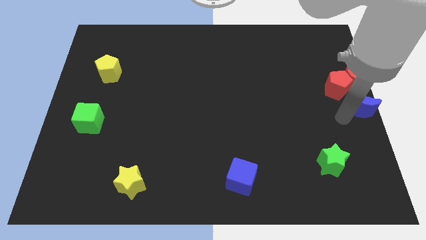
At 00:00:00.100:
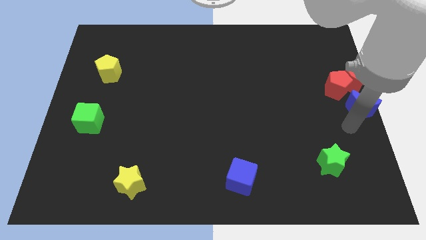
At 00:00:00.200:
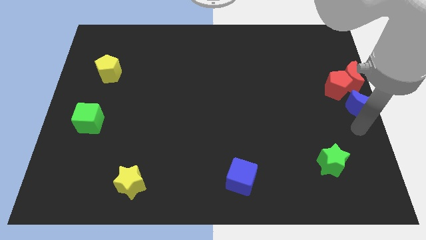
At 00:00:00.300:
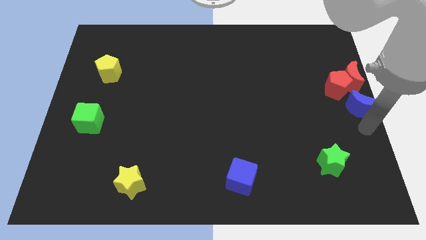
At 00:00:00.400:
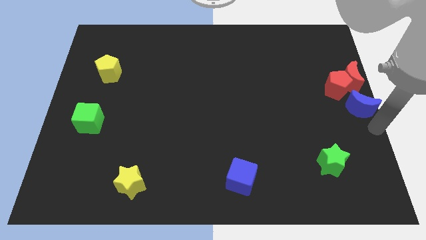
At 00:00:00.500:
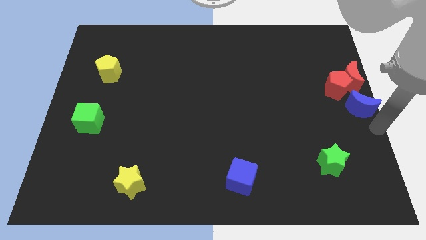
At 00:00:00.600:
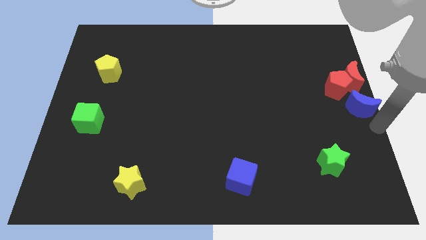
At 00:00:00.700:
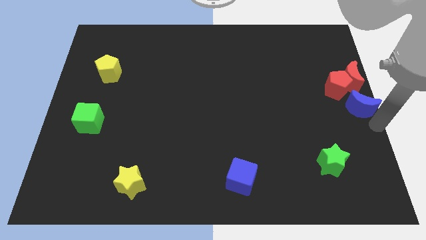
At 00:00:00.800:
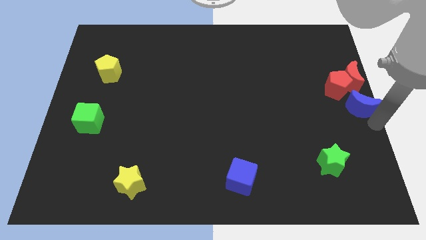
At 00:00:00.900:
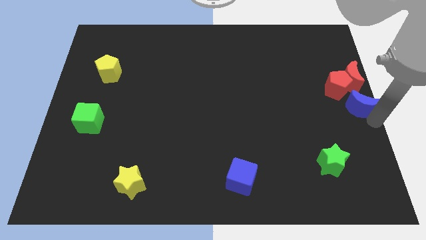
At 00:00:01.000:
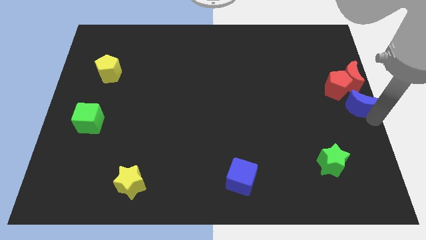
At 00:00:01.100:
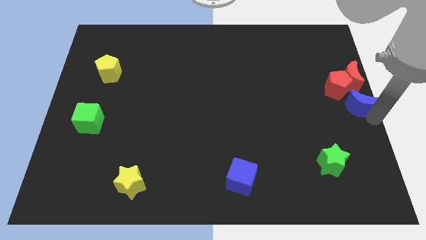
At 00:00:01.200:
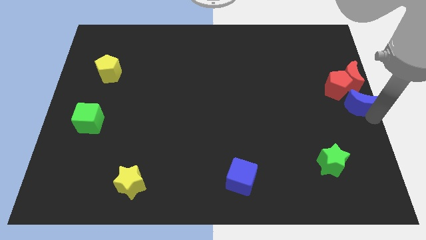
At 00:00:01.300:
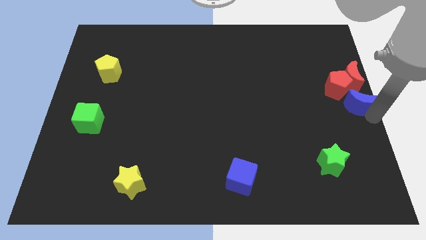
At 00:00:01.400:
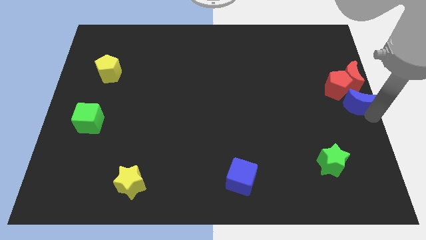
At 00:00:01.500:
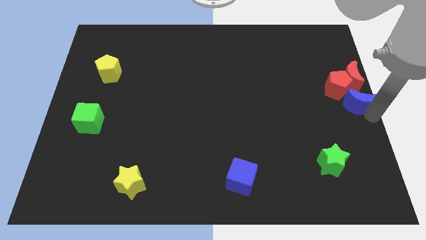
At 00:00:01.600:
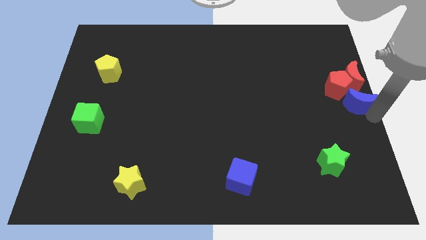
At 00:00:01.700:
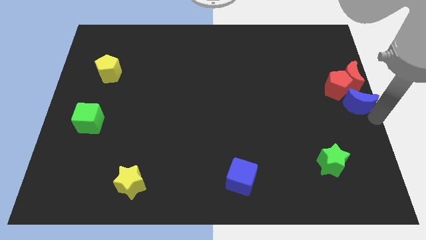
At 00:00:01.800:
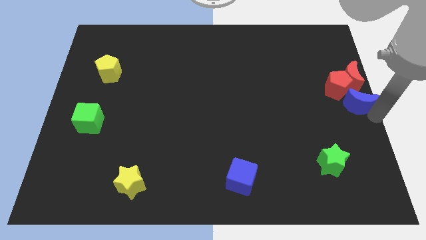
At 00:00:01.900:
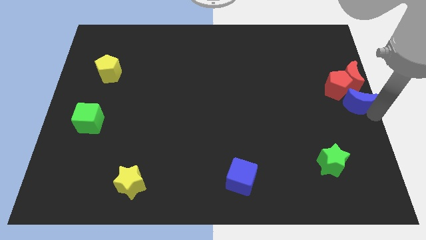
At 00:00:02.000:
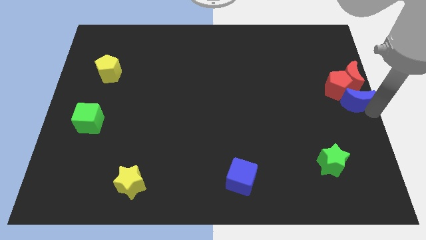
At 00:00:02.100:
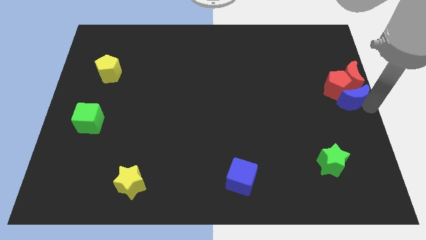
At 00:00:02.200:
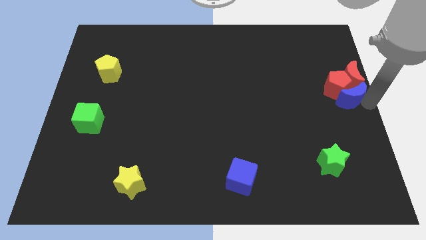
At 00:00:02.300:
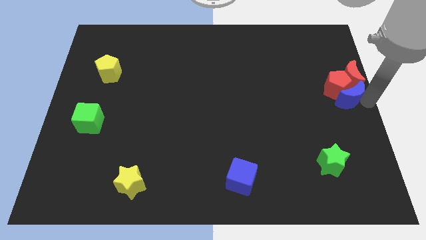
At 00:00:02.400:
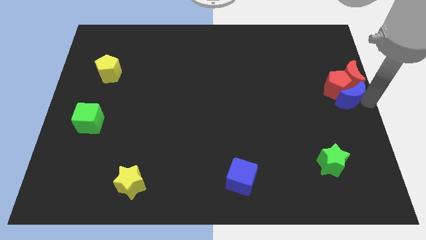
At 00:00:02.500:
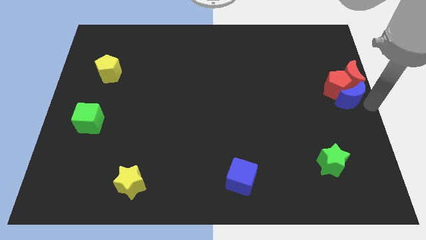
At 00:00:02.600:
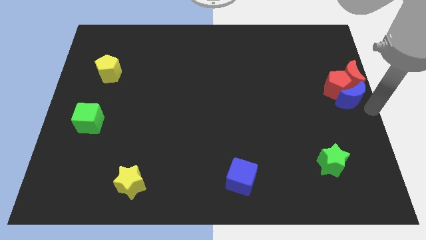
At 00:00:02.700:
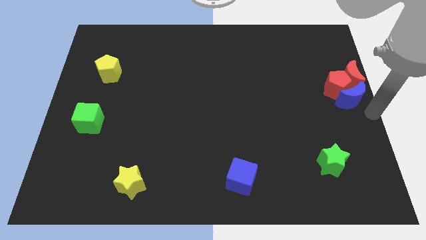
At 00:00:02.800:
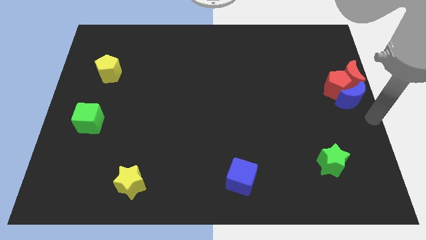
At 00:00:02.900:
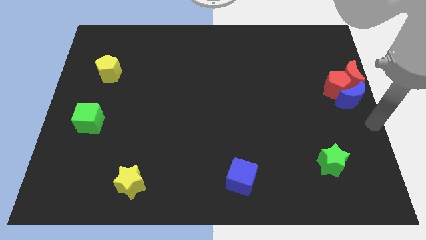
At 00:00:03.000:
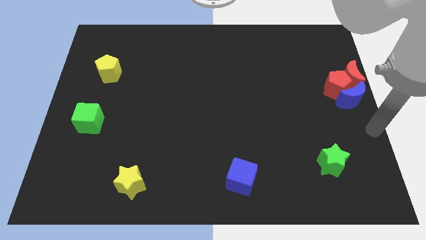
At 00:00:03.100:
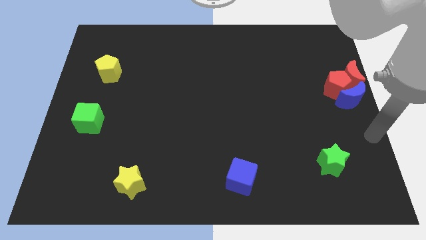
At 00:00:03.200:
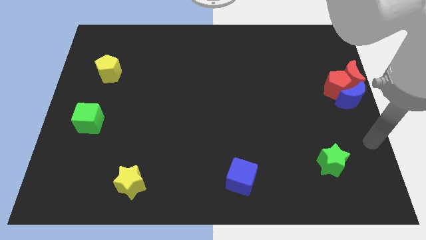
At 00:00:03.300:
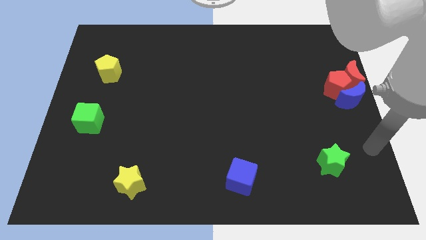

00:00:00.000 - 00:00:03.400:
push the blue moon into the red blocks

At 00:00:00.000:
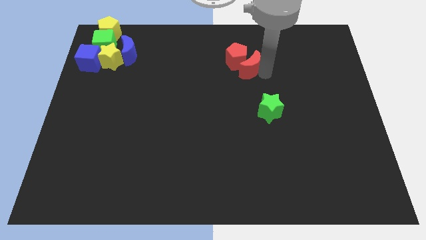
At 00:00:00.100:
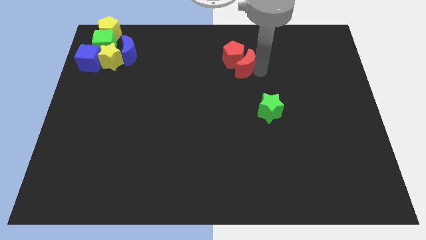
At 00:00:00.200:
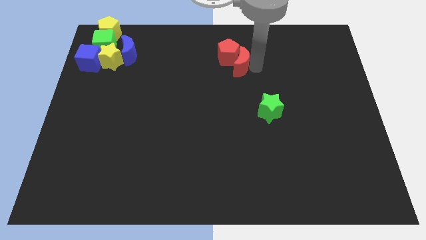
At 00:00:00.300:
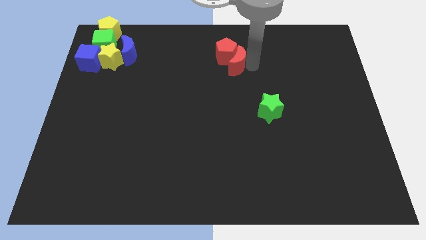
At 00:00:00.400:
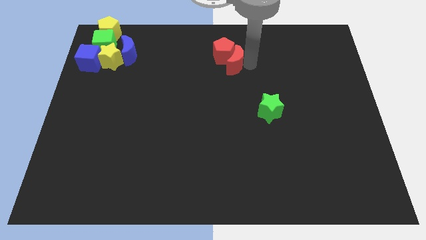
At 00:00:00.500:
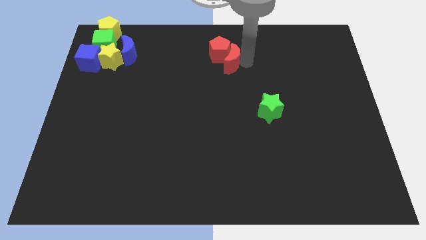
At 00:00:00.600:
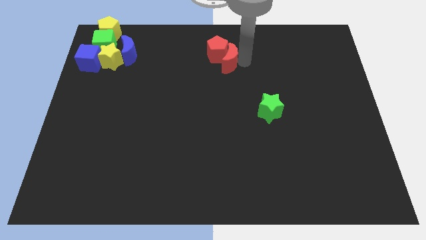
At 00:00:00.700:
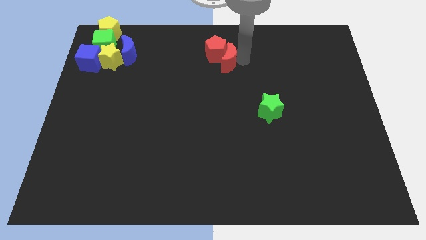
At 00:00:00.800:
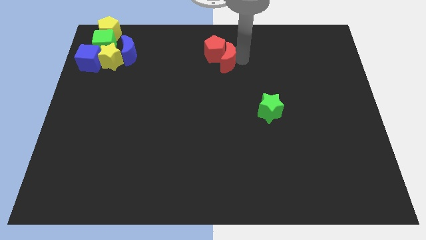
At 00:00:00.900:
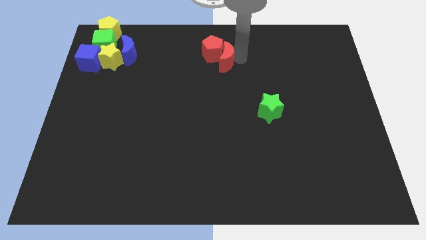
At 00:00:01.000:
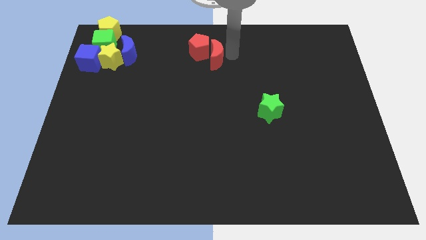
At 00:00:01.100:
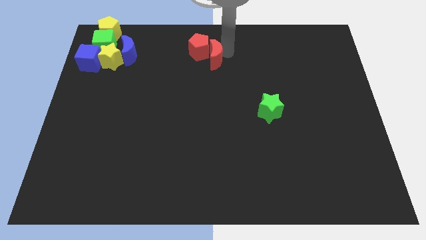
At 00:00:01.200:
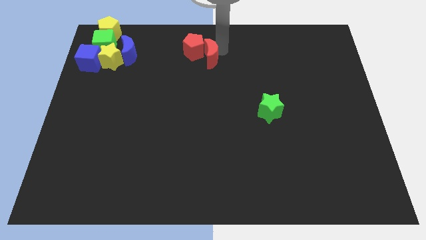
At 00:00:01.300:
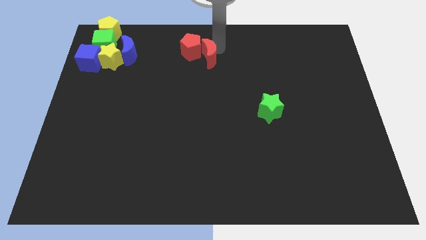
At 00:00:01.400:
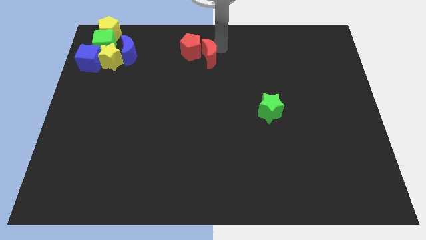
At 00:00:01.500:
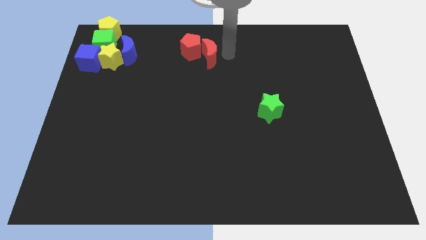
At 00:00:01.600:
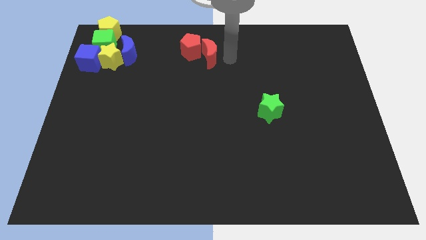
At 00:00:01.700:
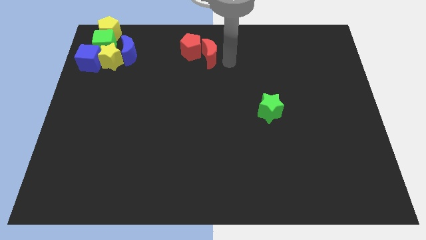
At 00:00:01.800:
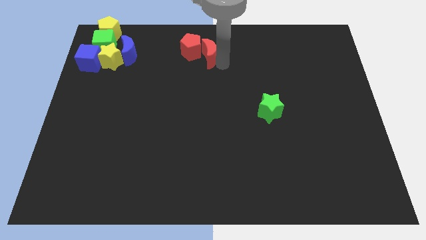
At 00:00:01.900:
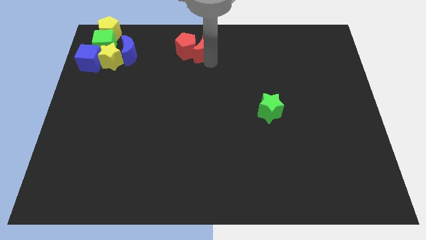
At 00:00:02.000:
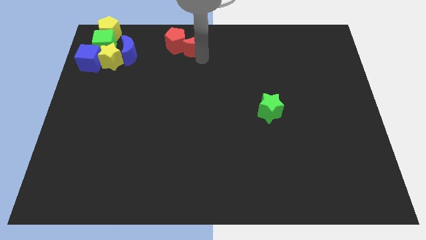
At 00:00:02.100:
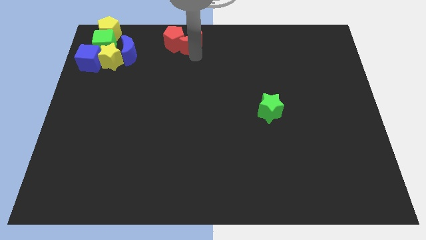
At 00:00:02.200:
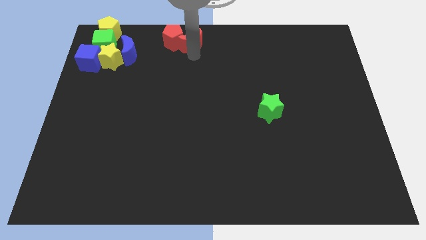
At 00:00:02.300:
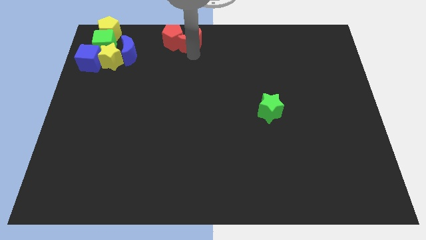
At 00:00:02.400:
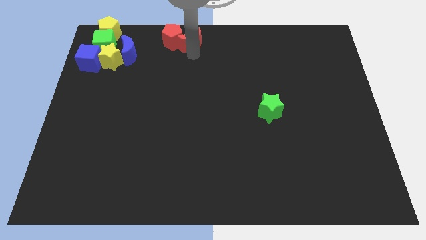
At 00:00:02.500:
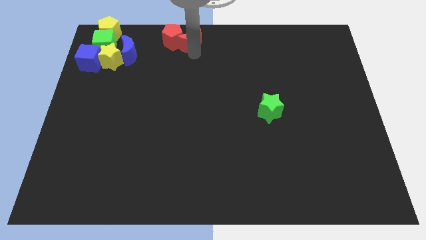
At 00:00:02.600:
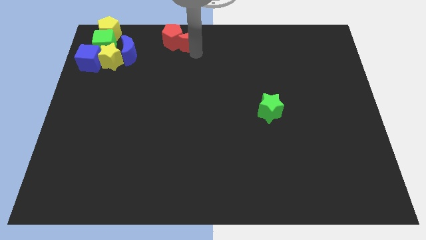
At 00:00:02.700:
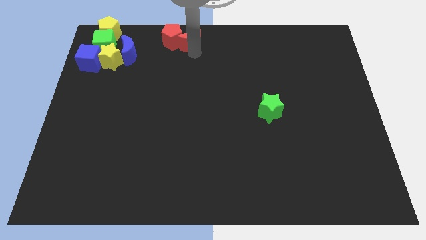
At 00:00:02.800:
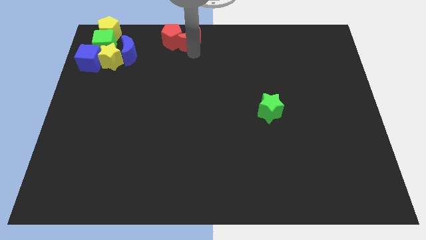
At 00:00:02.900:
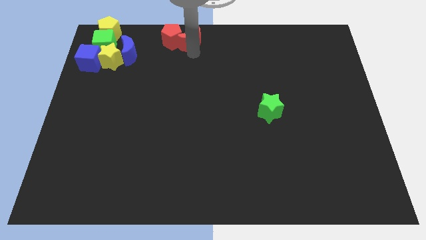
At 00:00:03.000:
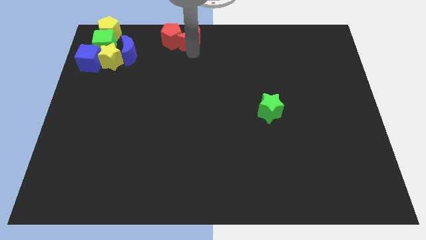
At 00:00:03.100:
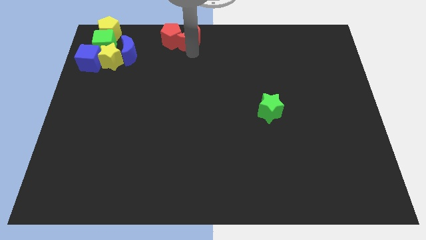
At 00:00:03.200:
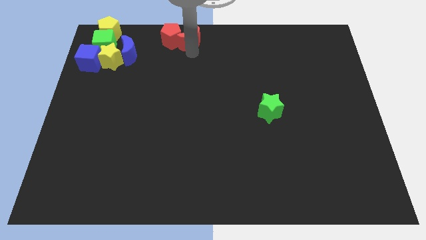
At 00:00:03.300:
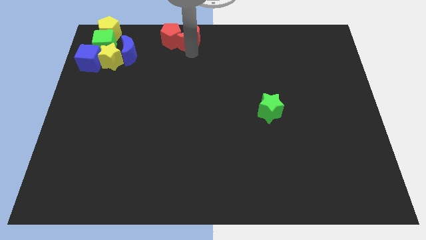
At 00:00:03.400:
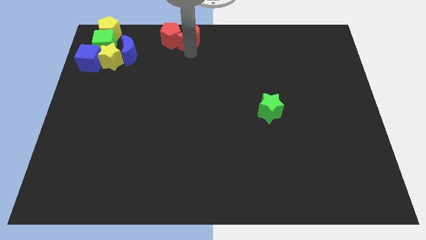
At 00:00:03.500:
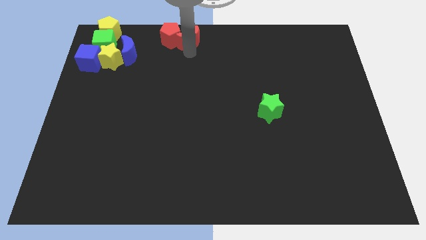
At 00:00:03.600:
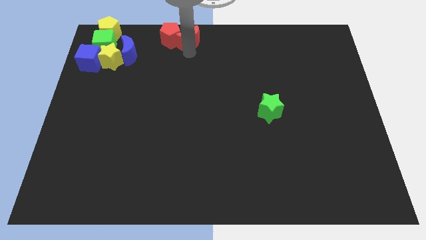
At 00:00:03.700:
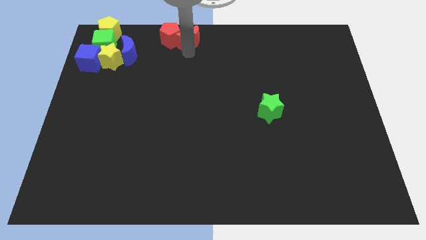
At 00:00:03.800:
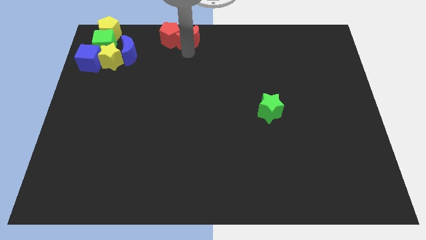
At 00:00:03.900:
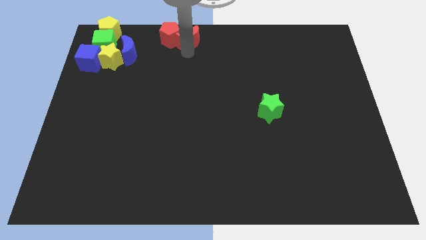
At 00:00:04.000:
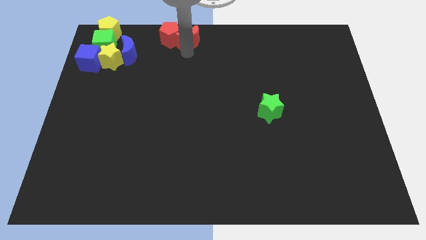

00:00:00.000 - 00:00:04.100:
push the red crescent and red pentagon towards the top right side of the board

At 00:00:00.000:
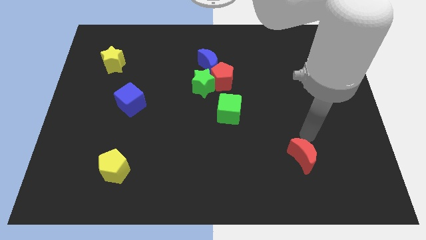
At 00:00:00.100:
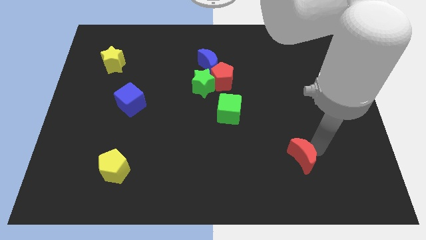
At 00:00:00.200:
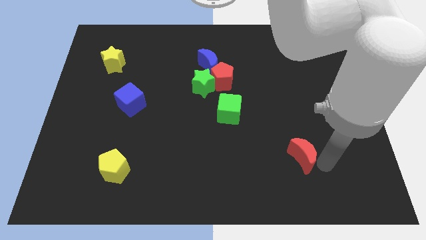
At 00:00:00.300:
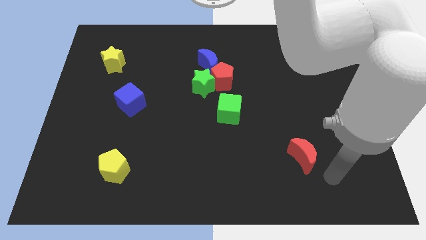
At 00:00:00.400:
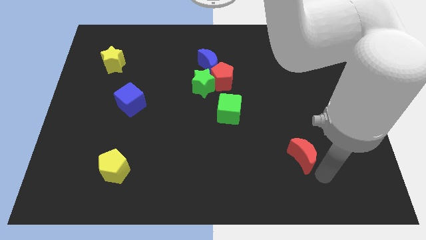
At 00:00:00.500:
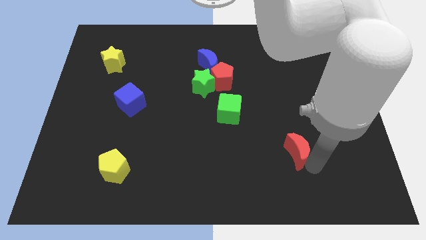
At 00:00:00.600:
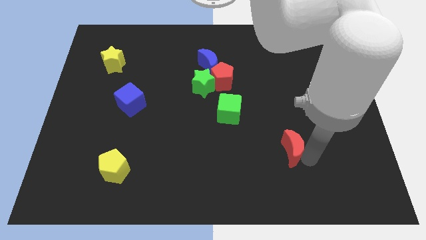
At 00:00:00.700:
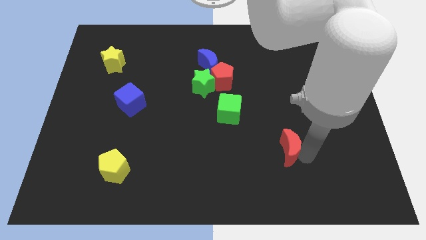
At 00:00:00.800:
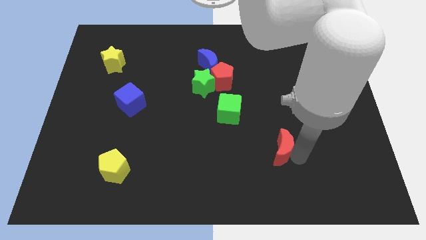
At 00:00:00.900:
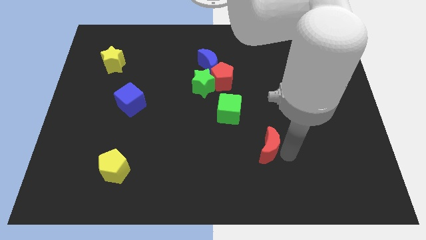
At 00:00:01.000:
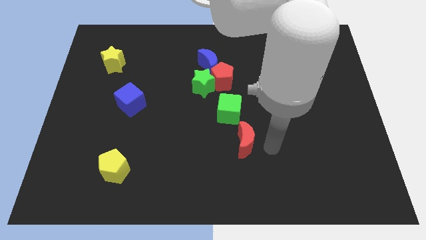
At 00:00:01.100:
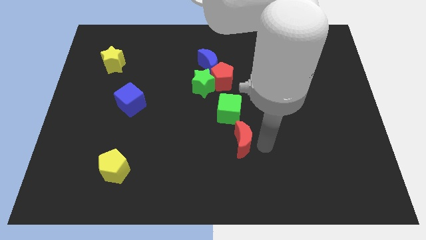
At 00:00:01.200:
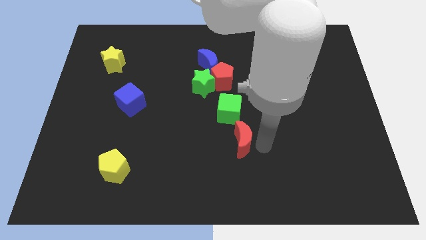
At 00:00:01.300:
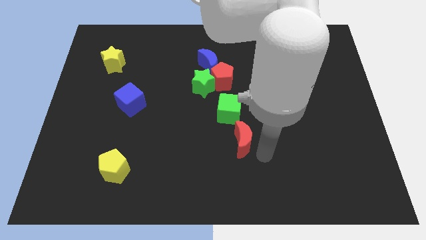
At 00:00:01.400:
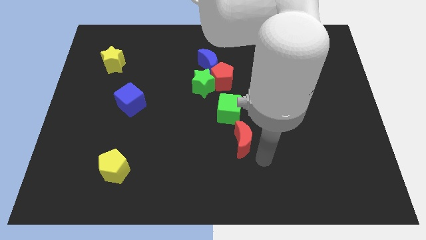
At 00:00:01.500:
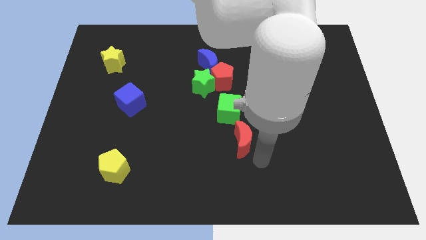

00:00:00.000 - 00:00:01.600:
slide the red moon close to the green cube
